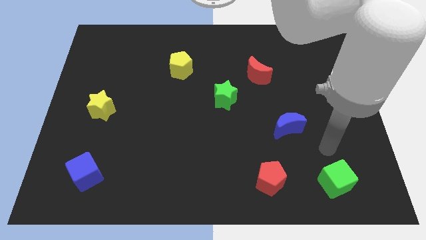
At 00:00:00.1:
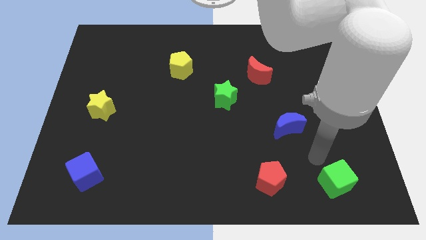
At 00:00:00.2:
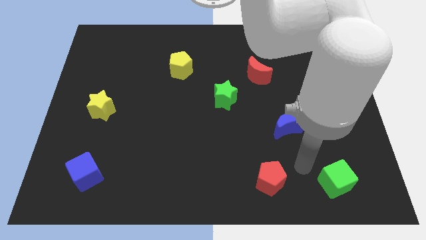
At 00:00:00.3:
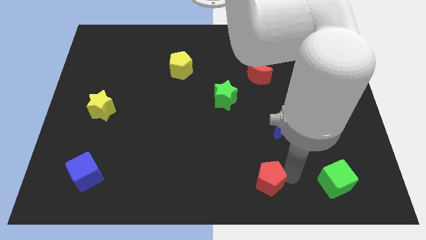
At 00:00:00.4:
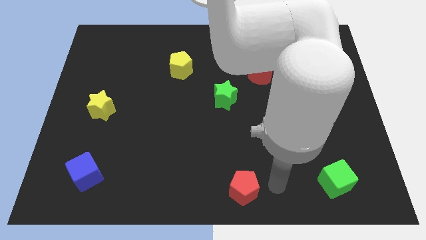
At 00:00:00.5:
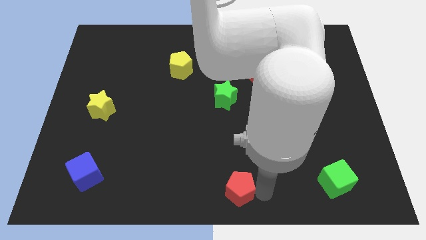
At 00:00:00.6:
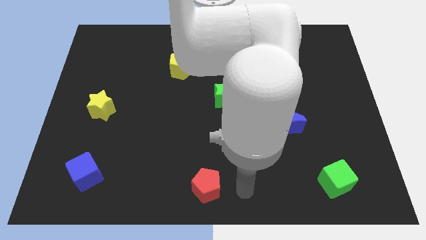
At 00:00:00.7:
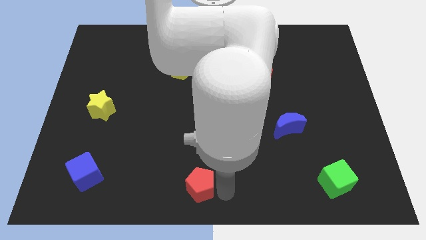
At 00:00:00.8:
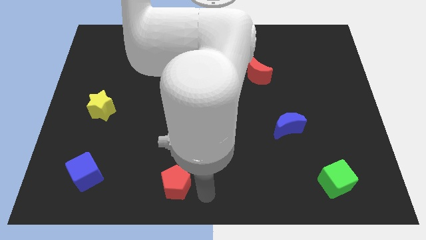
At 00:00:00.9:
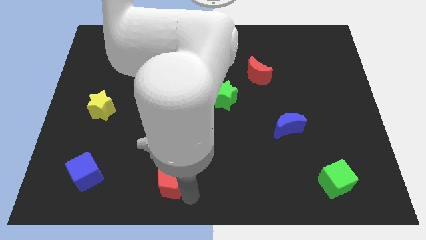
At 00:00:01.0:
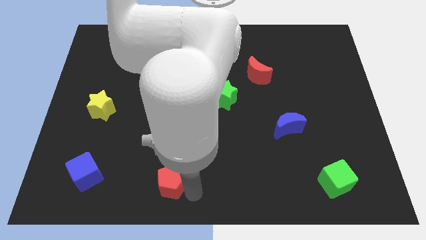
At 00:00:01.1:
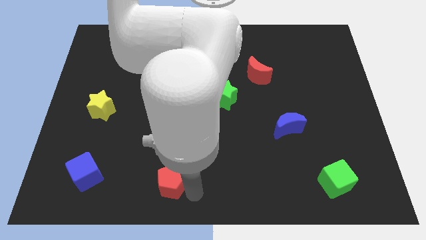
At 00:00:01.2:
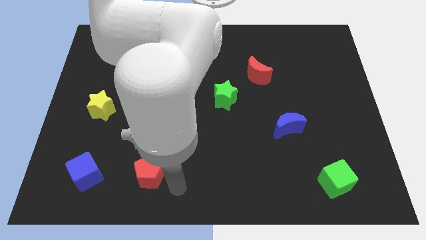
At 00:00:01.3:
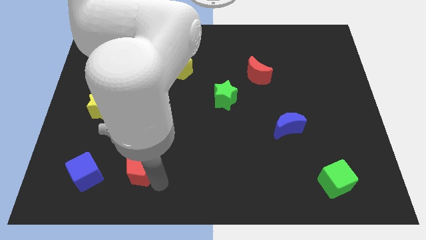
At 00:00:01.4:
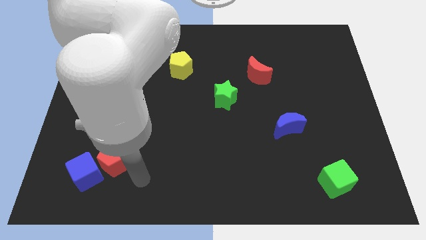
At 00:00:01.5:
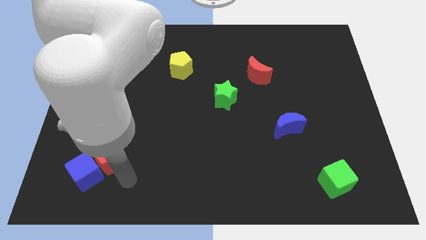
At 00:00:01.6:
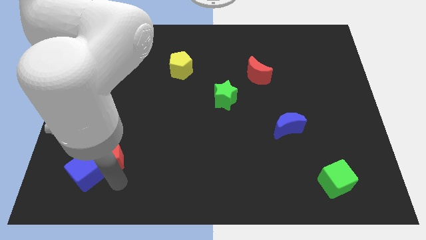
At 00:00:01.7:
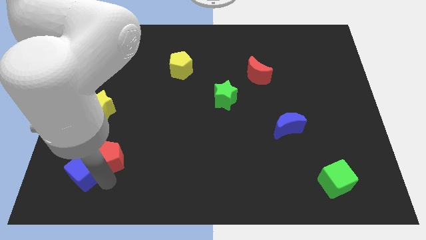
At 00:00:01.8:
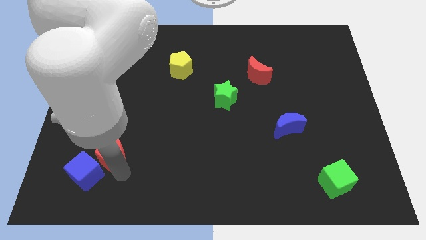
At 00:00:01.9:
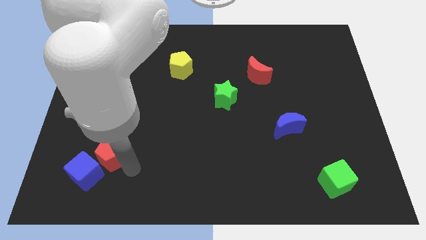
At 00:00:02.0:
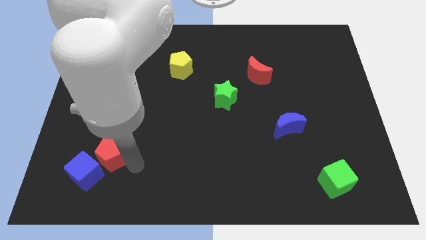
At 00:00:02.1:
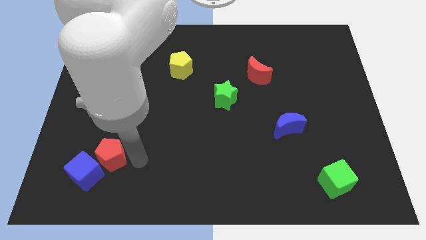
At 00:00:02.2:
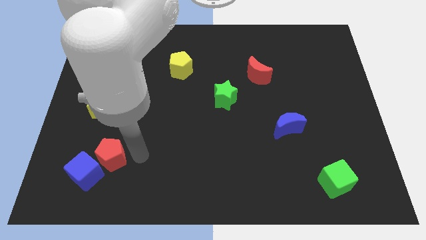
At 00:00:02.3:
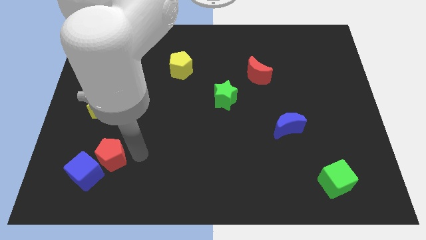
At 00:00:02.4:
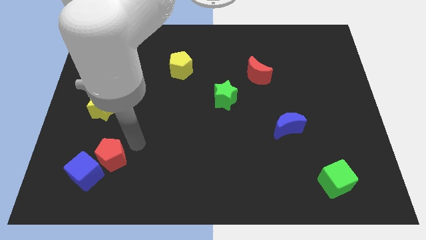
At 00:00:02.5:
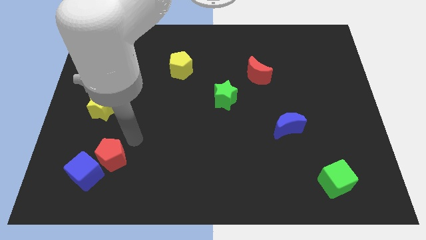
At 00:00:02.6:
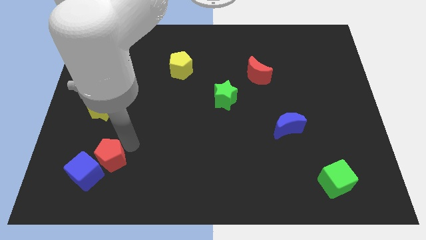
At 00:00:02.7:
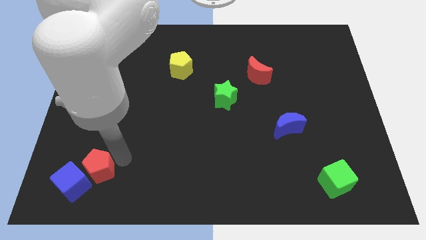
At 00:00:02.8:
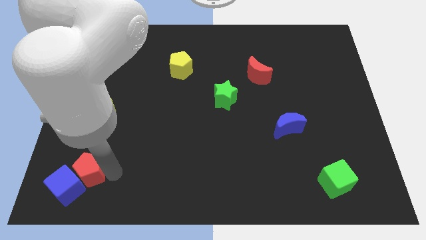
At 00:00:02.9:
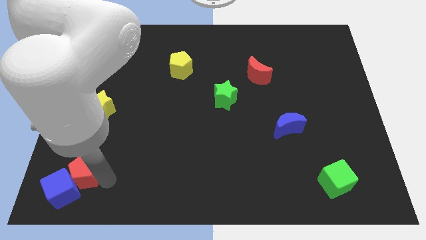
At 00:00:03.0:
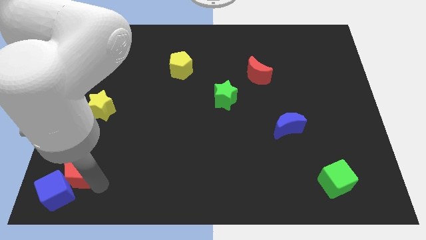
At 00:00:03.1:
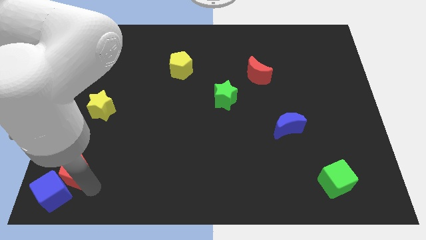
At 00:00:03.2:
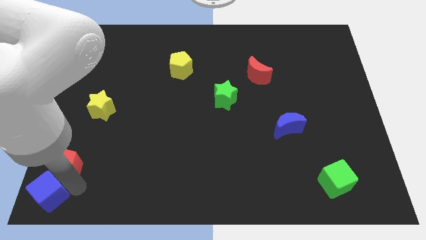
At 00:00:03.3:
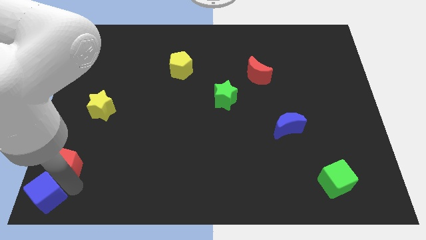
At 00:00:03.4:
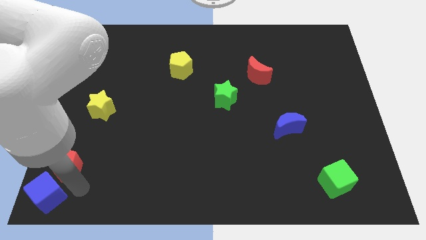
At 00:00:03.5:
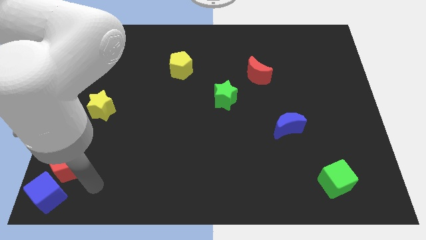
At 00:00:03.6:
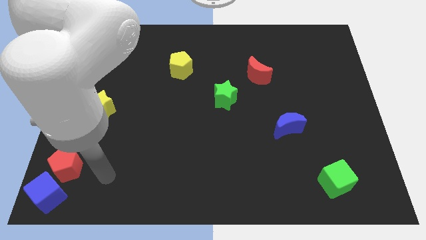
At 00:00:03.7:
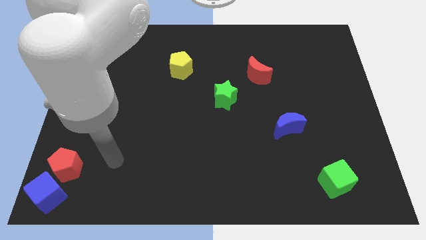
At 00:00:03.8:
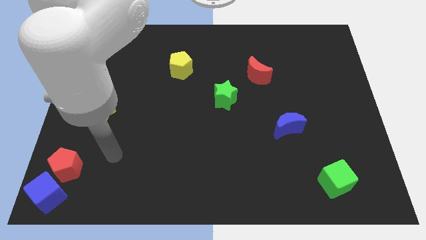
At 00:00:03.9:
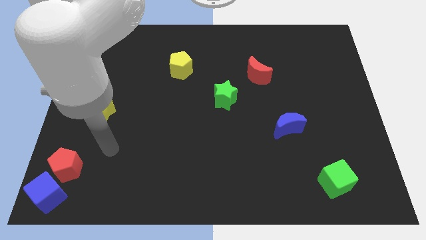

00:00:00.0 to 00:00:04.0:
push the red pentagon into the blue cube

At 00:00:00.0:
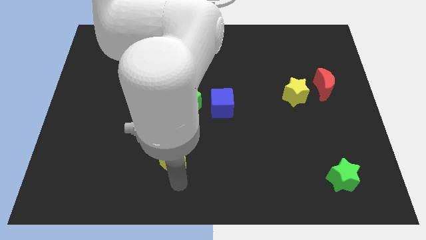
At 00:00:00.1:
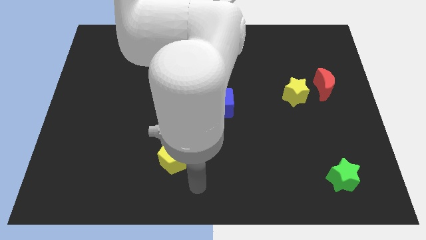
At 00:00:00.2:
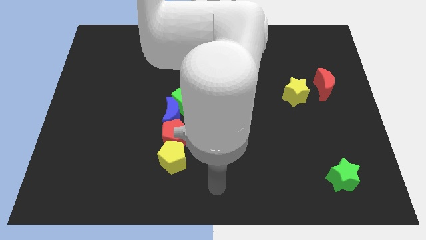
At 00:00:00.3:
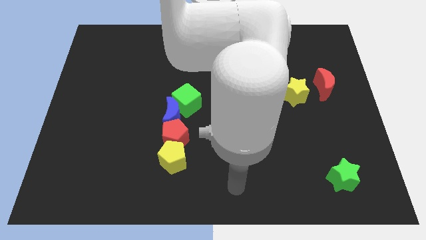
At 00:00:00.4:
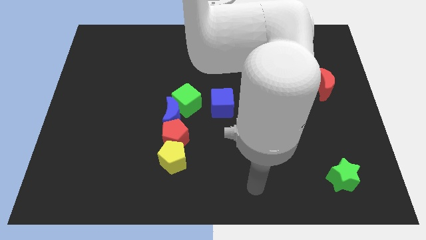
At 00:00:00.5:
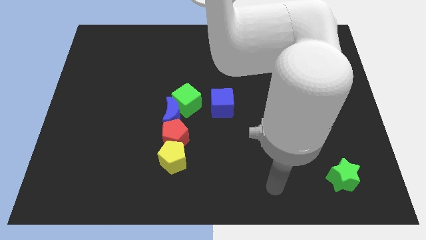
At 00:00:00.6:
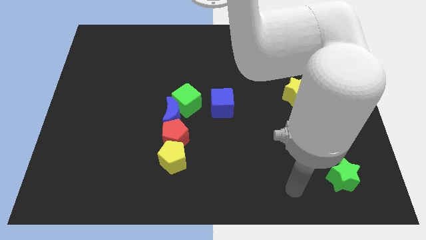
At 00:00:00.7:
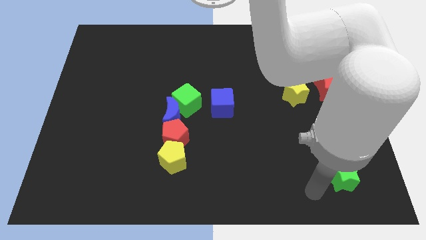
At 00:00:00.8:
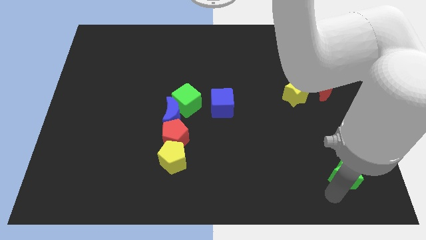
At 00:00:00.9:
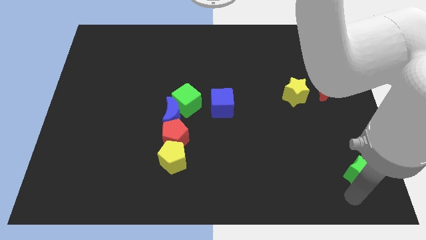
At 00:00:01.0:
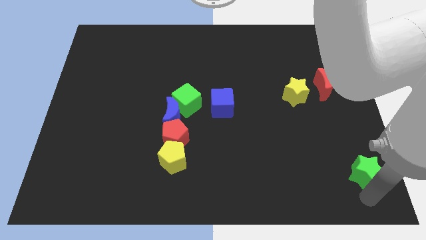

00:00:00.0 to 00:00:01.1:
place arm on the bottom of green star

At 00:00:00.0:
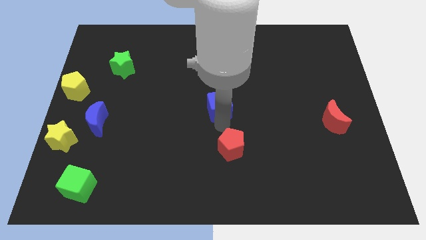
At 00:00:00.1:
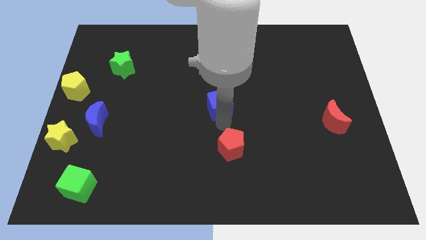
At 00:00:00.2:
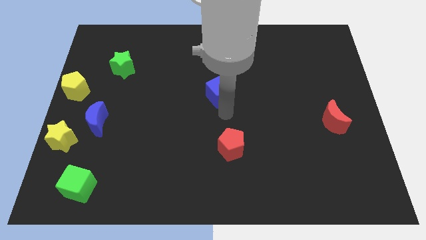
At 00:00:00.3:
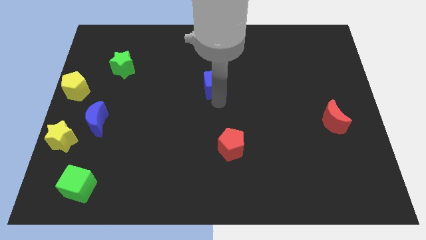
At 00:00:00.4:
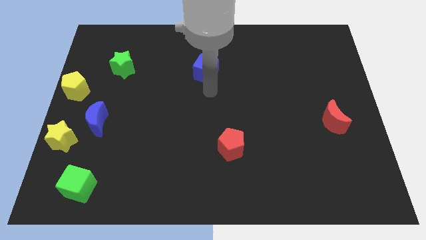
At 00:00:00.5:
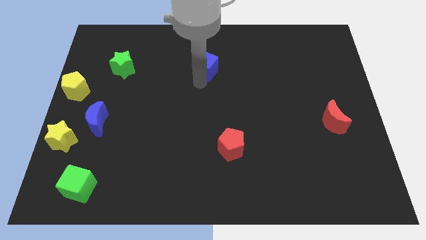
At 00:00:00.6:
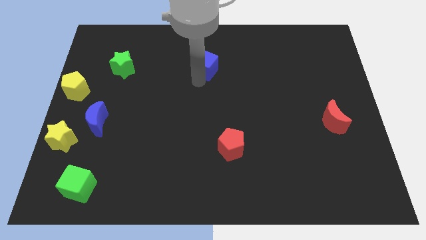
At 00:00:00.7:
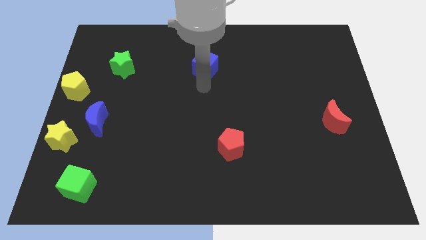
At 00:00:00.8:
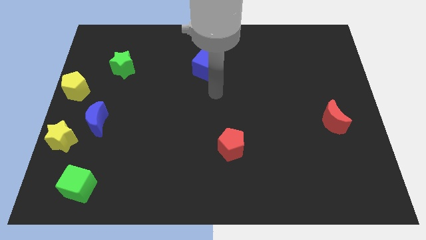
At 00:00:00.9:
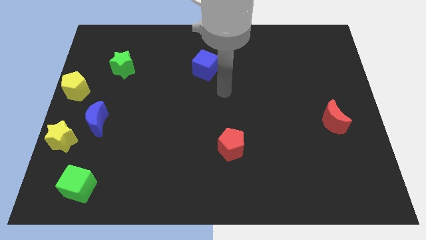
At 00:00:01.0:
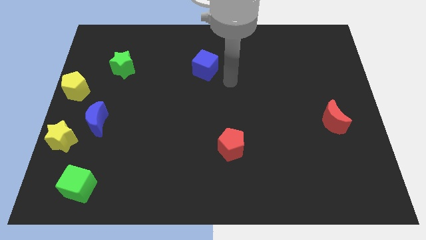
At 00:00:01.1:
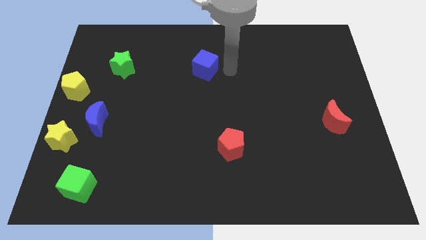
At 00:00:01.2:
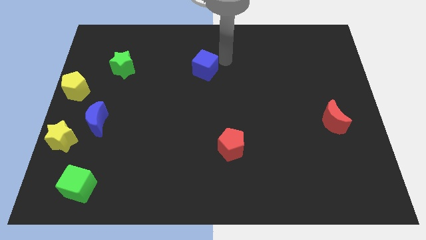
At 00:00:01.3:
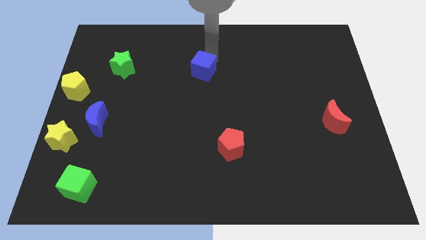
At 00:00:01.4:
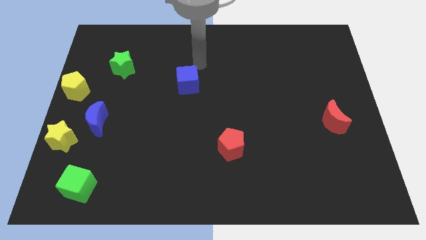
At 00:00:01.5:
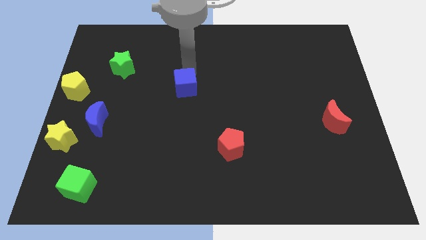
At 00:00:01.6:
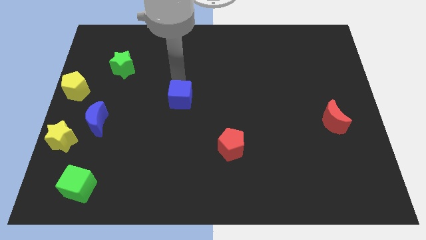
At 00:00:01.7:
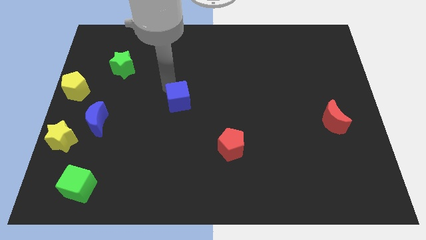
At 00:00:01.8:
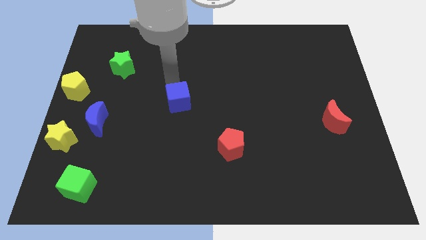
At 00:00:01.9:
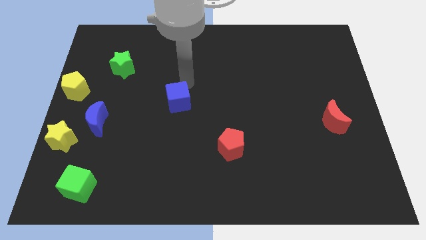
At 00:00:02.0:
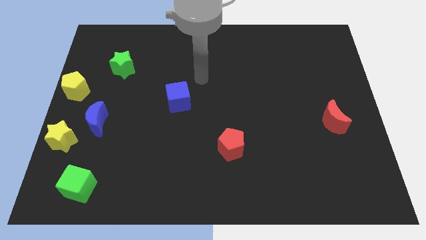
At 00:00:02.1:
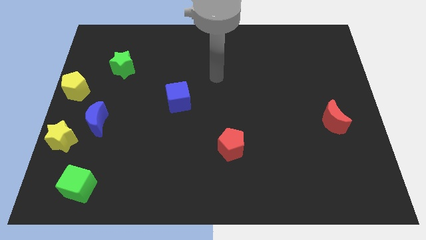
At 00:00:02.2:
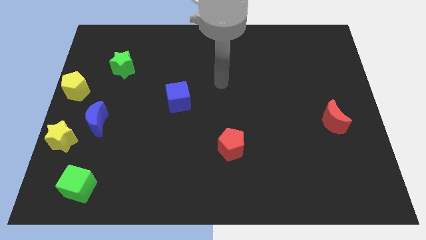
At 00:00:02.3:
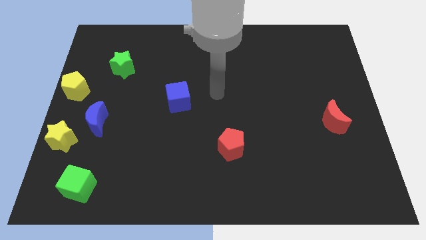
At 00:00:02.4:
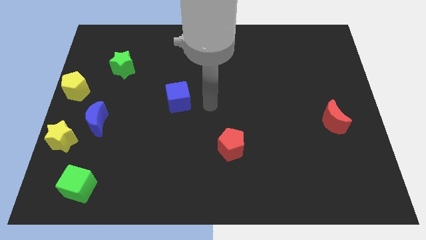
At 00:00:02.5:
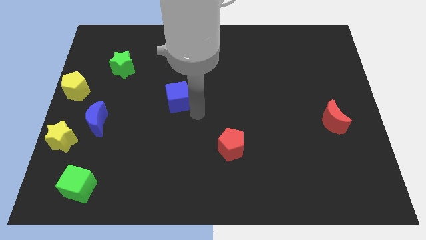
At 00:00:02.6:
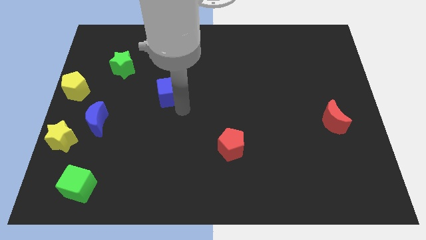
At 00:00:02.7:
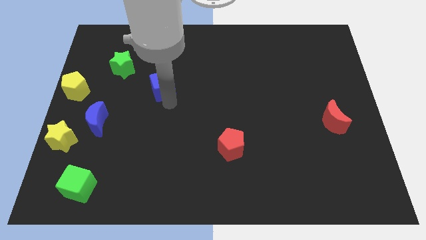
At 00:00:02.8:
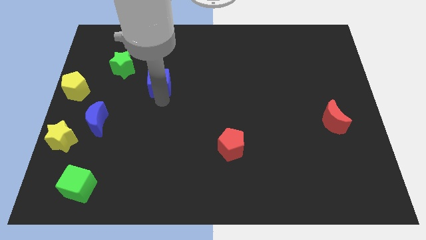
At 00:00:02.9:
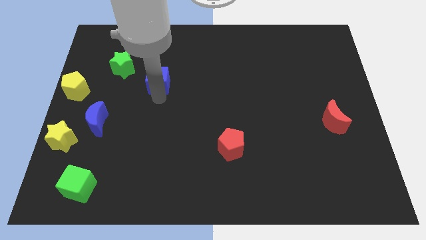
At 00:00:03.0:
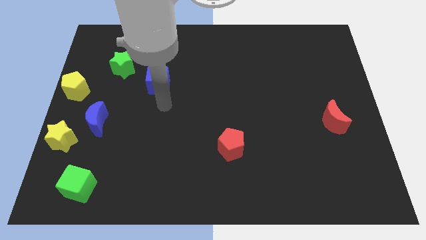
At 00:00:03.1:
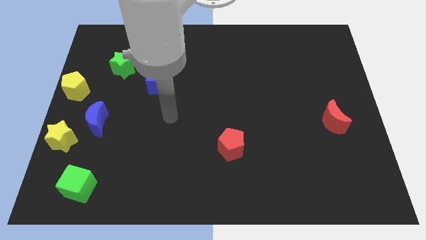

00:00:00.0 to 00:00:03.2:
push the blue cube towards the green star

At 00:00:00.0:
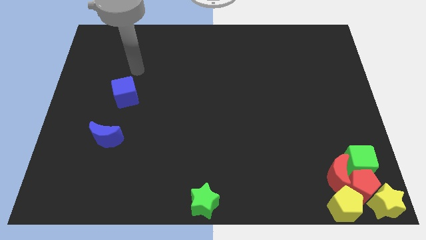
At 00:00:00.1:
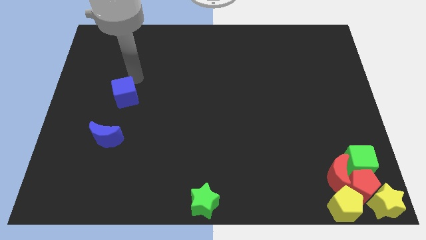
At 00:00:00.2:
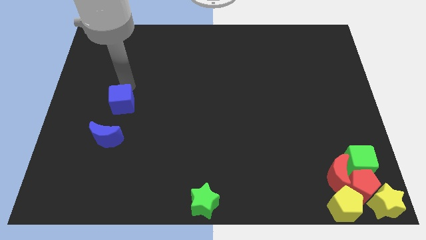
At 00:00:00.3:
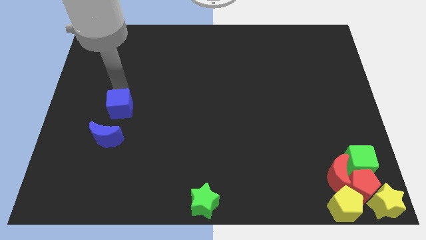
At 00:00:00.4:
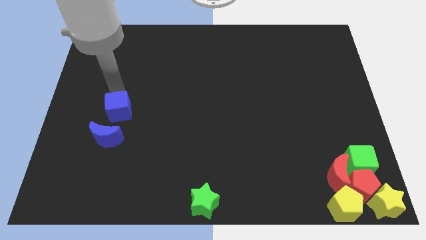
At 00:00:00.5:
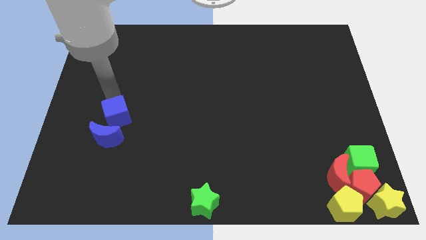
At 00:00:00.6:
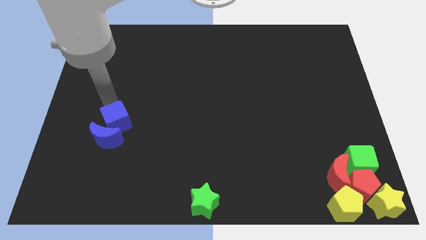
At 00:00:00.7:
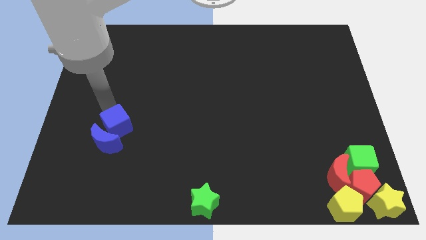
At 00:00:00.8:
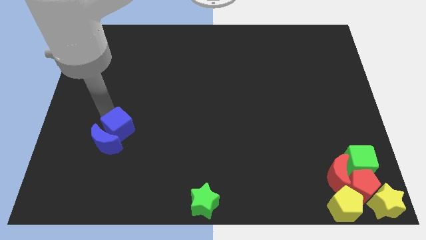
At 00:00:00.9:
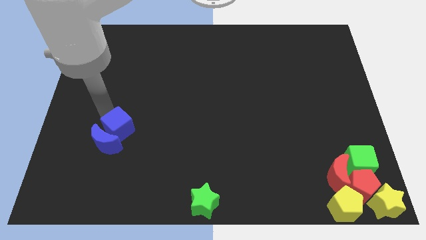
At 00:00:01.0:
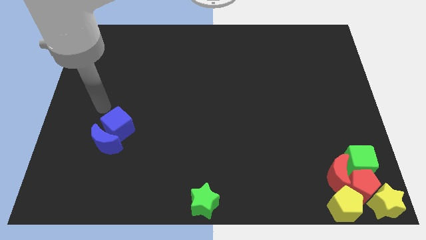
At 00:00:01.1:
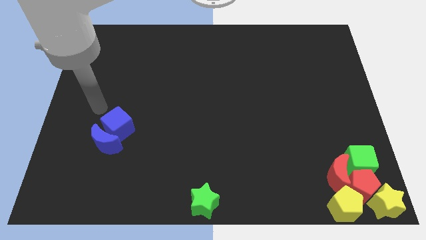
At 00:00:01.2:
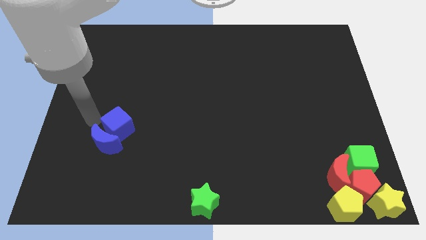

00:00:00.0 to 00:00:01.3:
push the blue cube into the blue crescent
